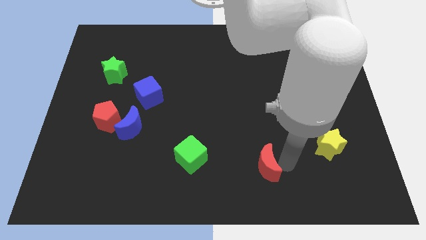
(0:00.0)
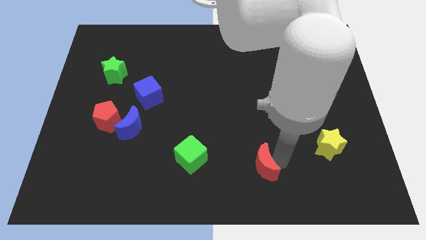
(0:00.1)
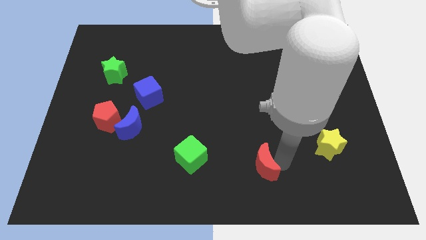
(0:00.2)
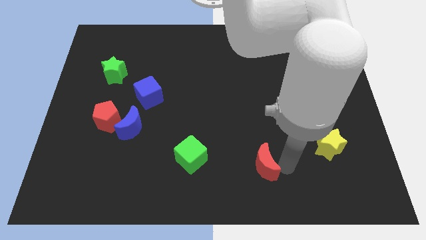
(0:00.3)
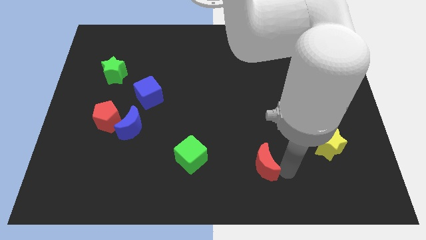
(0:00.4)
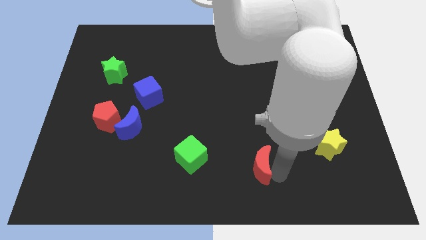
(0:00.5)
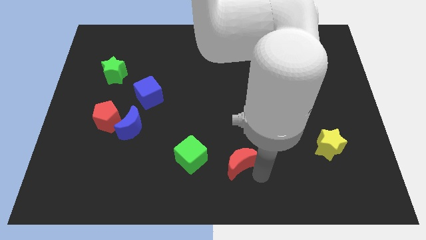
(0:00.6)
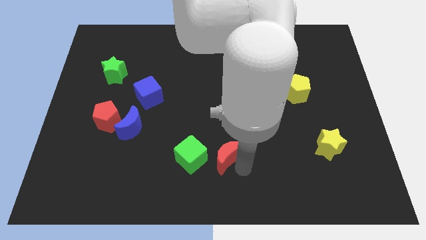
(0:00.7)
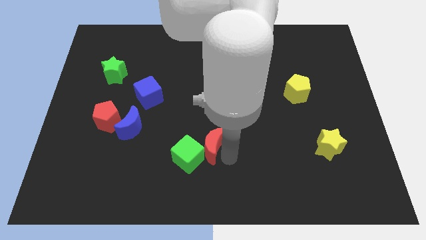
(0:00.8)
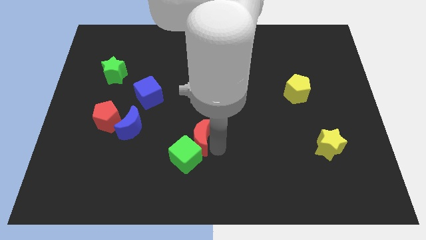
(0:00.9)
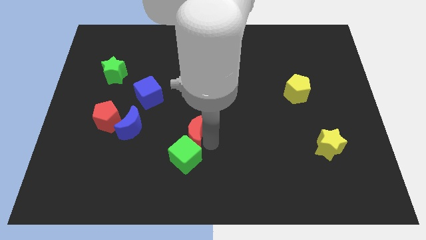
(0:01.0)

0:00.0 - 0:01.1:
push the red moon into the green cube

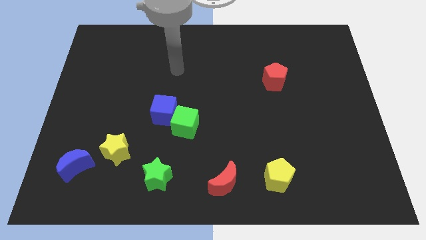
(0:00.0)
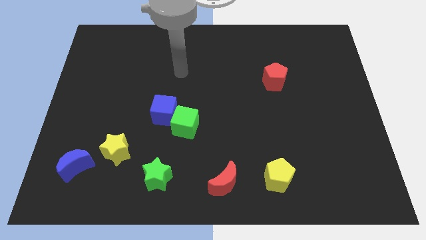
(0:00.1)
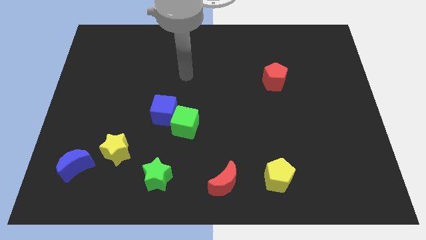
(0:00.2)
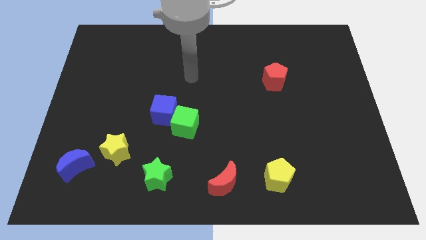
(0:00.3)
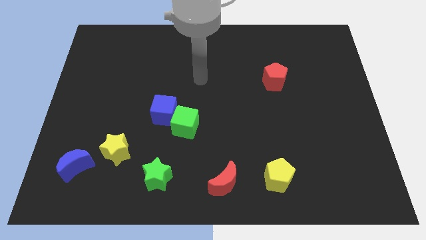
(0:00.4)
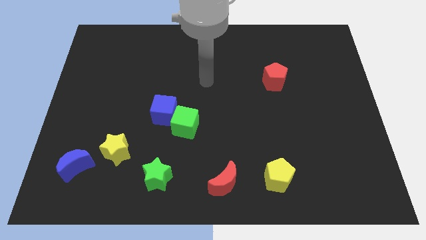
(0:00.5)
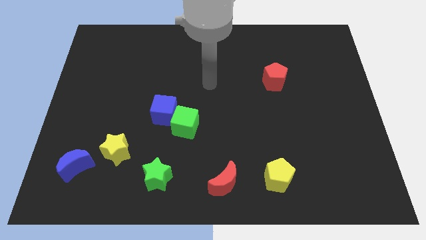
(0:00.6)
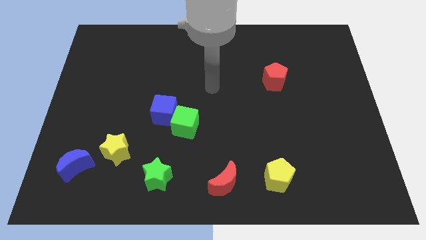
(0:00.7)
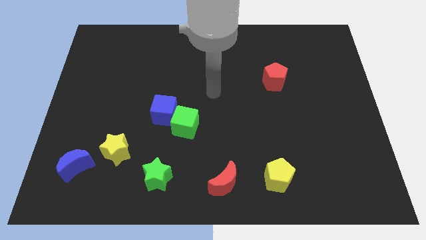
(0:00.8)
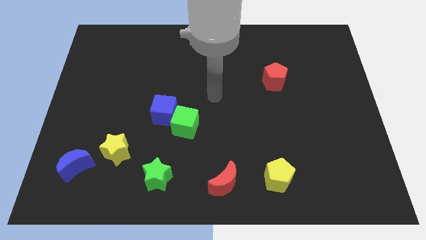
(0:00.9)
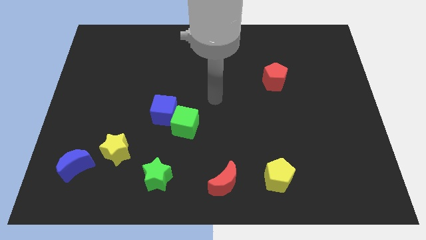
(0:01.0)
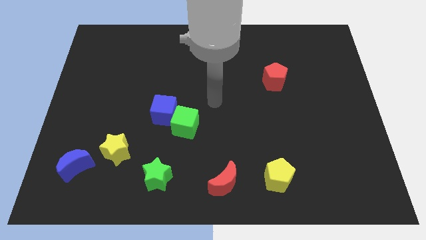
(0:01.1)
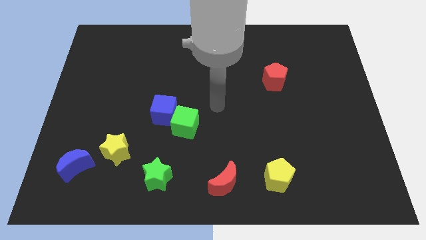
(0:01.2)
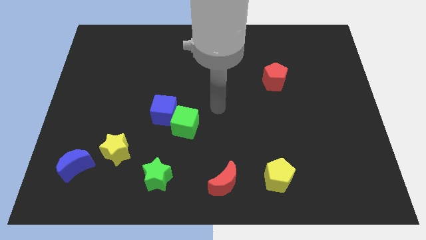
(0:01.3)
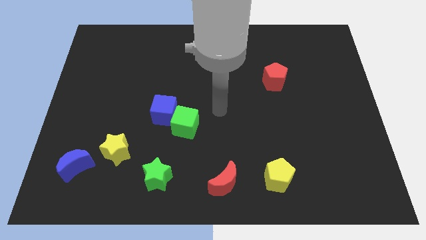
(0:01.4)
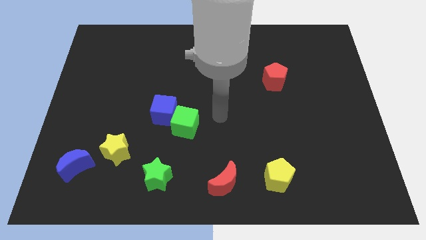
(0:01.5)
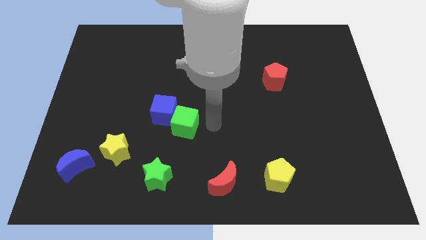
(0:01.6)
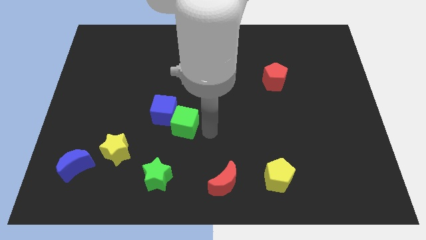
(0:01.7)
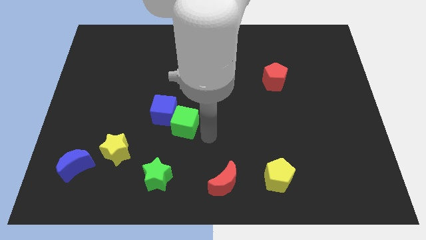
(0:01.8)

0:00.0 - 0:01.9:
put your arm parallel right to the green cube

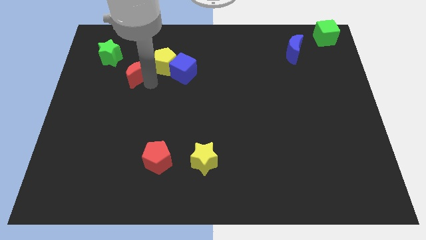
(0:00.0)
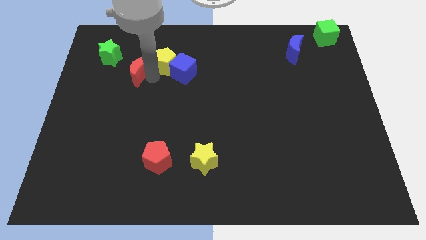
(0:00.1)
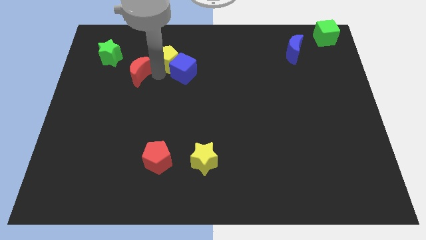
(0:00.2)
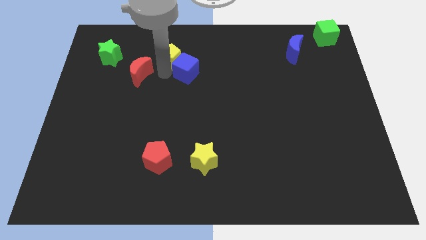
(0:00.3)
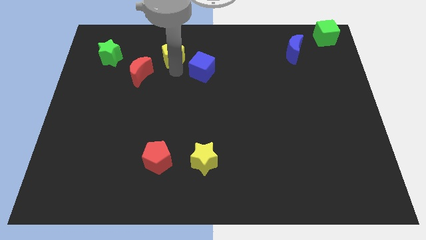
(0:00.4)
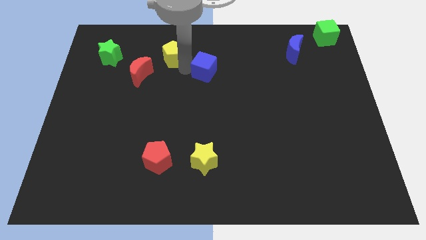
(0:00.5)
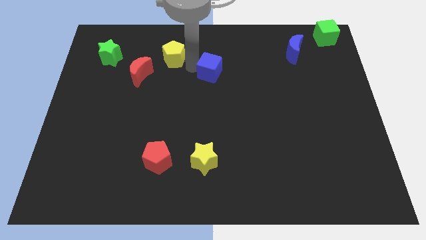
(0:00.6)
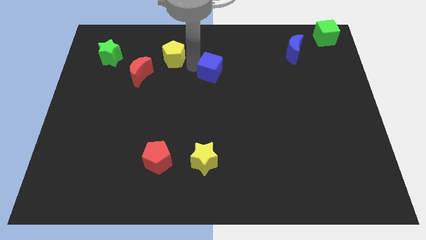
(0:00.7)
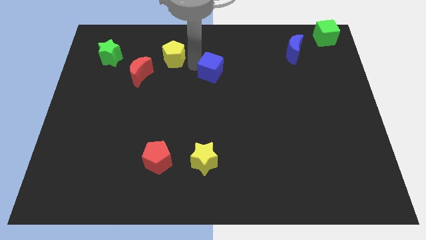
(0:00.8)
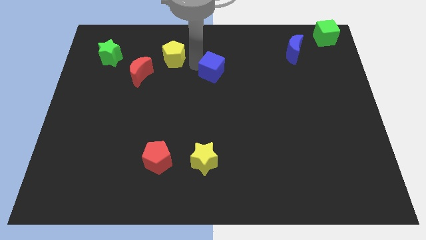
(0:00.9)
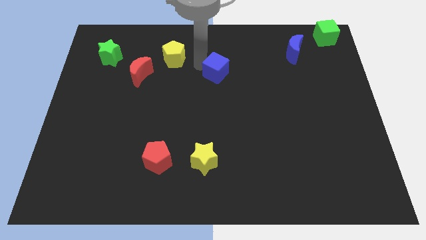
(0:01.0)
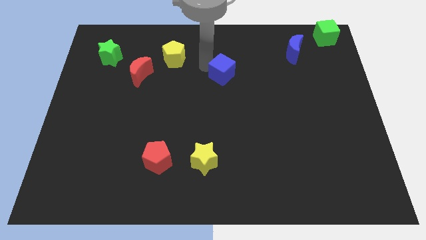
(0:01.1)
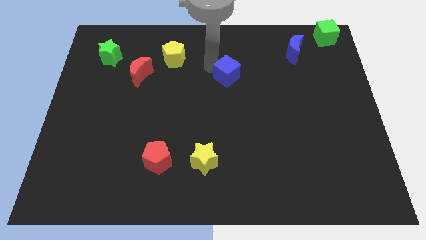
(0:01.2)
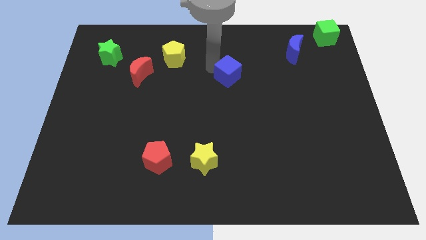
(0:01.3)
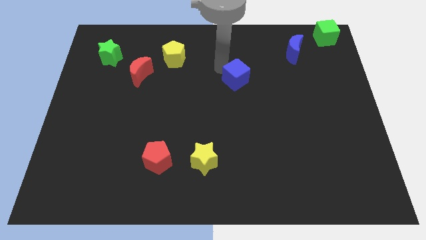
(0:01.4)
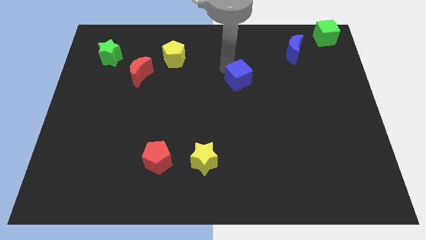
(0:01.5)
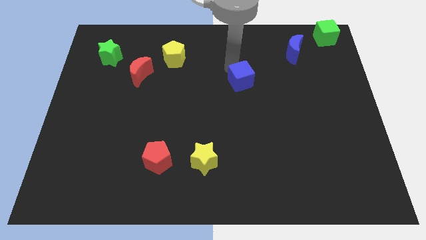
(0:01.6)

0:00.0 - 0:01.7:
separate the blue moon from the yellow pentagon

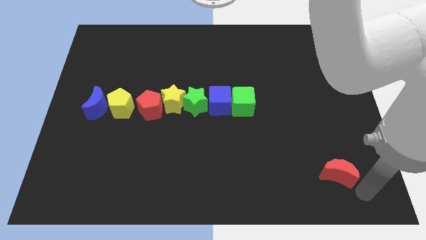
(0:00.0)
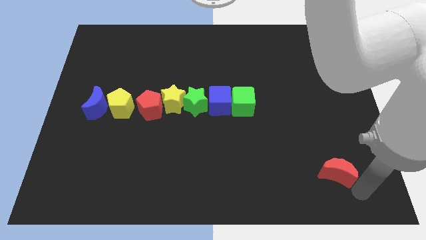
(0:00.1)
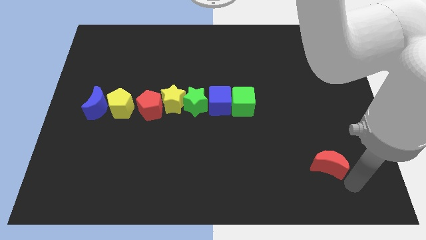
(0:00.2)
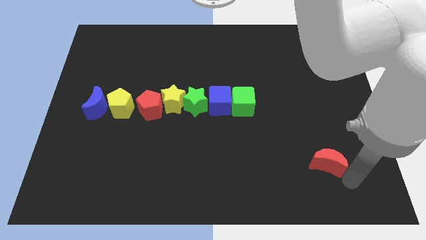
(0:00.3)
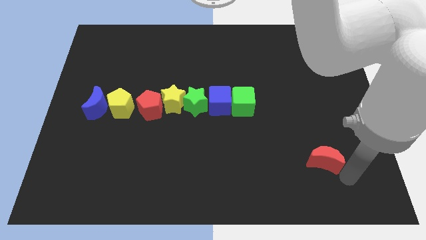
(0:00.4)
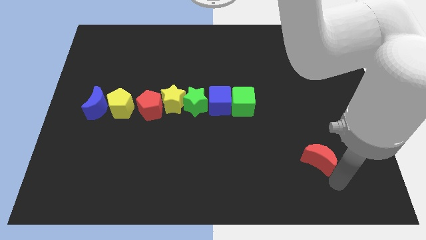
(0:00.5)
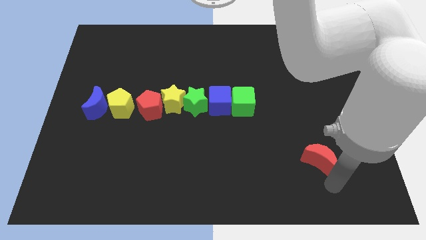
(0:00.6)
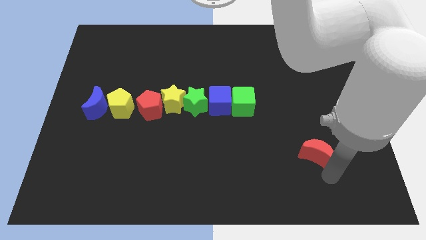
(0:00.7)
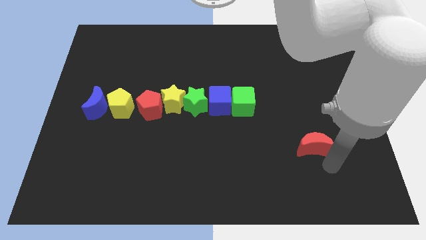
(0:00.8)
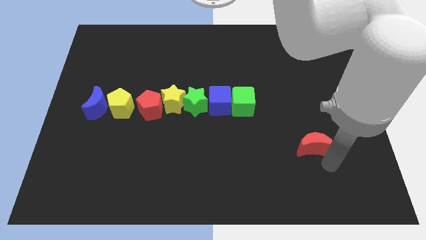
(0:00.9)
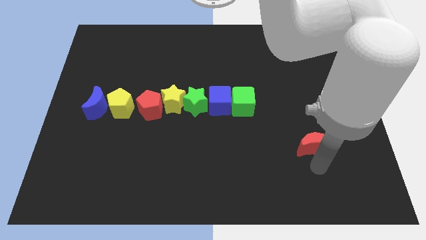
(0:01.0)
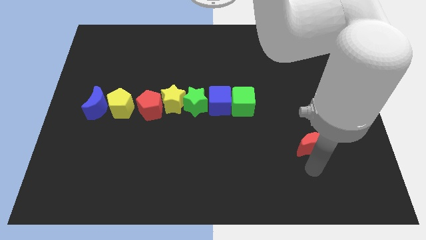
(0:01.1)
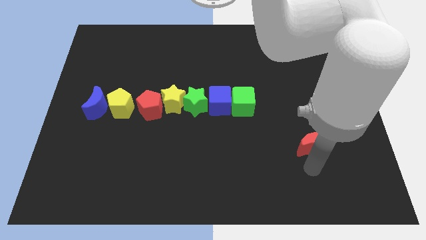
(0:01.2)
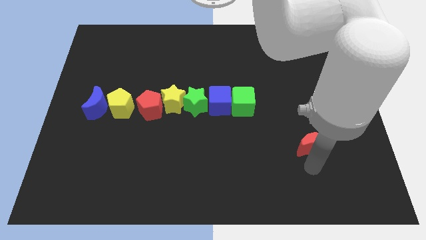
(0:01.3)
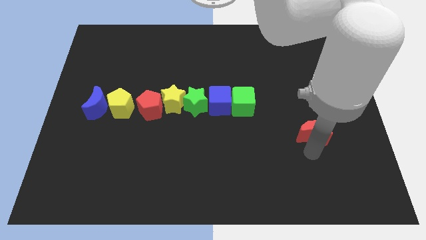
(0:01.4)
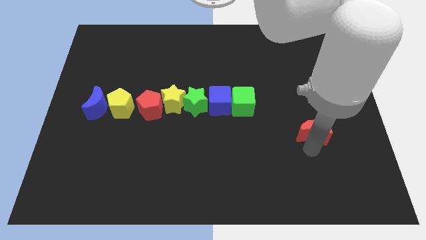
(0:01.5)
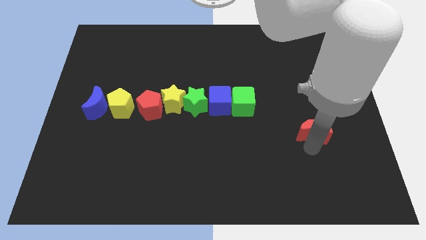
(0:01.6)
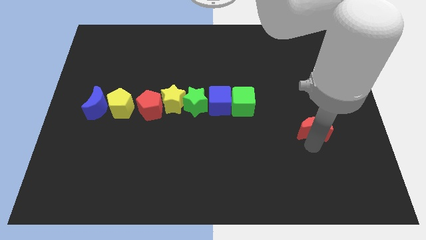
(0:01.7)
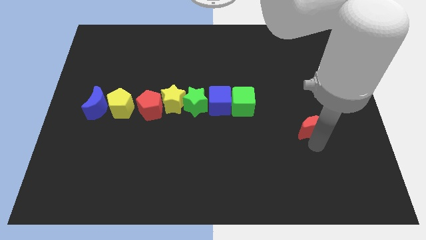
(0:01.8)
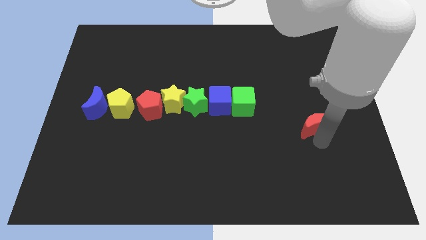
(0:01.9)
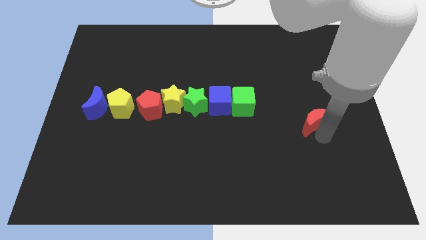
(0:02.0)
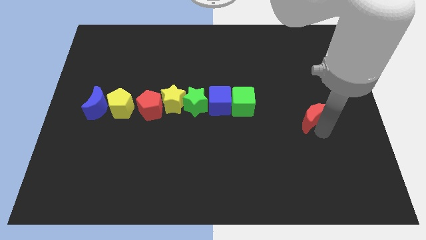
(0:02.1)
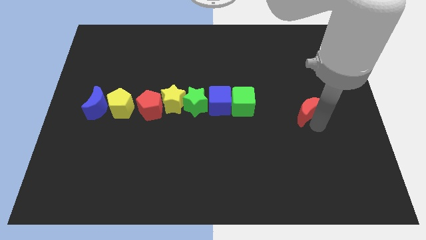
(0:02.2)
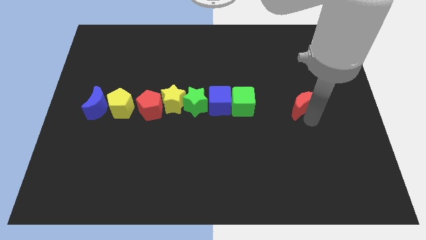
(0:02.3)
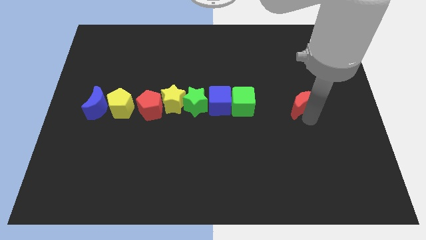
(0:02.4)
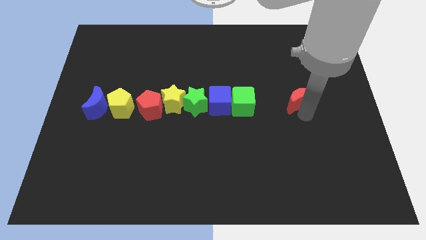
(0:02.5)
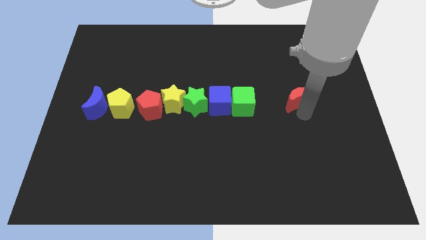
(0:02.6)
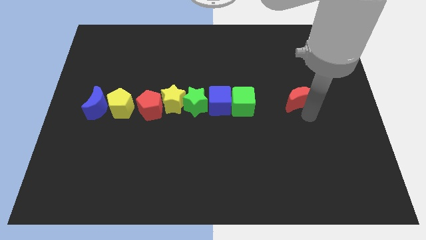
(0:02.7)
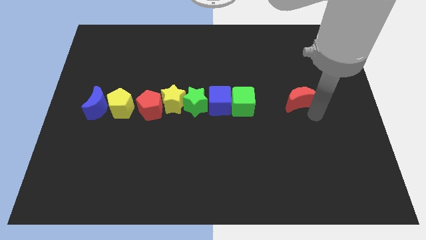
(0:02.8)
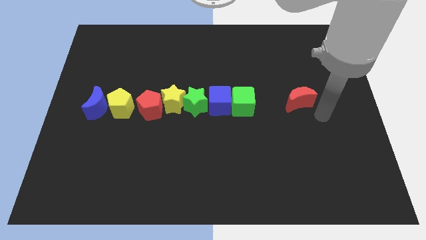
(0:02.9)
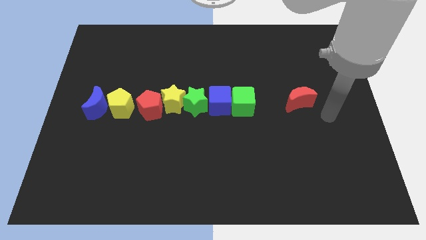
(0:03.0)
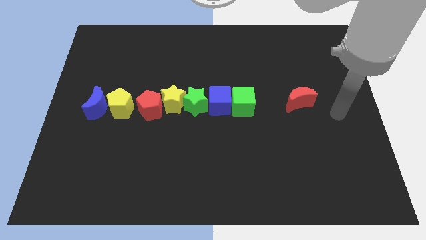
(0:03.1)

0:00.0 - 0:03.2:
move the red crescent parallel to the right of the green cube

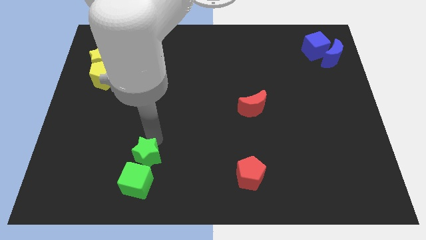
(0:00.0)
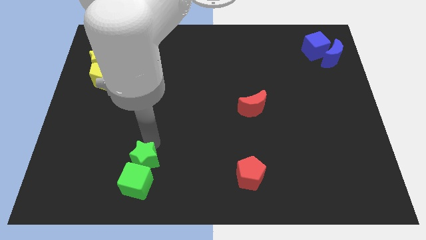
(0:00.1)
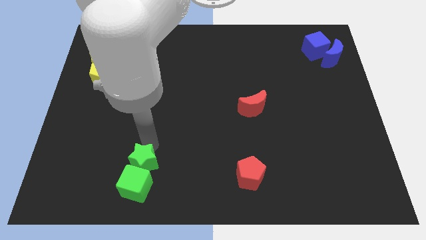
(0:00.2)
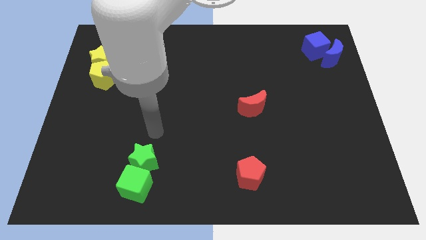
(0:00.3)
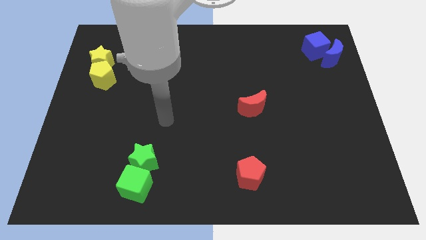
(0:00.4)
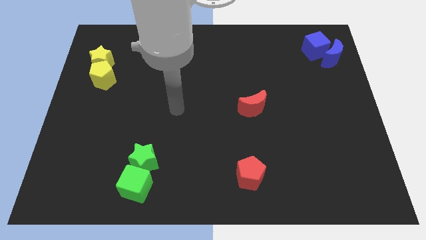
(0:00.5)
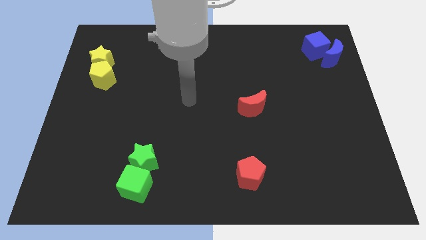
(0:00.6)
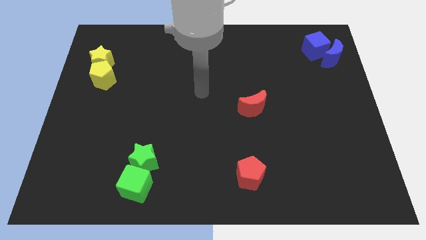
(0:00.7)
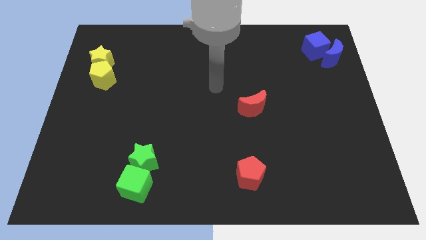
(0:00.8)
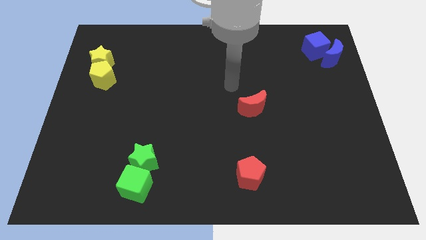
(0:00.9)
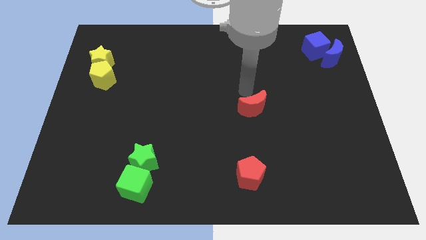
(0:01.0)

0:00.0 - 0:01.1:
move your arm away from the green star
